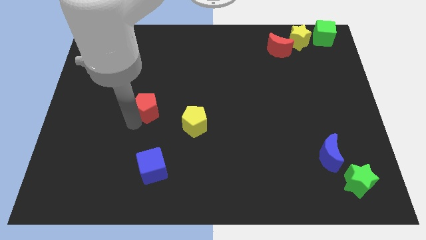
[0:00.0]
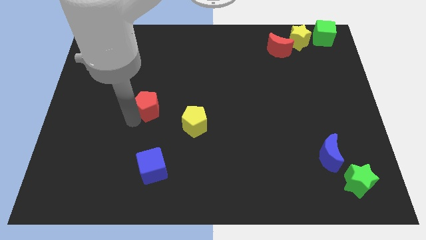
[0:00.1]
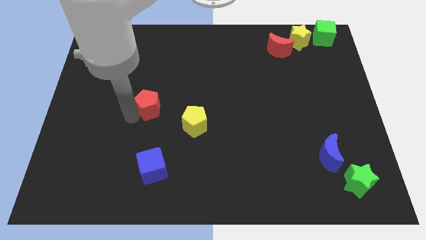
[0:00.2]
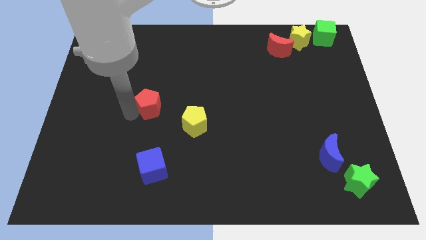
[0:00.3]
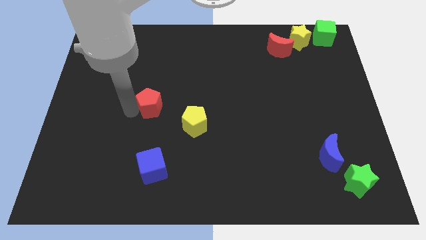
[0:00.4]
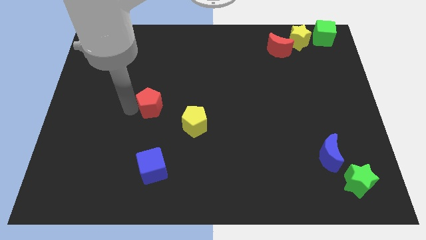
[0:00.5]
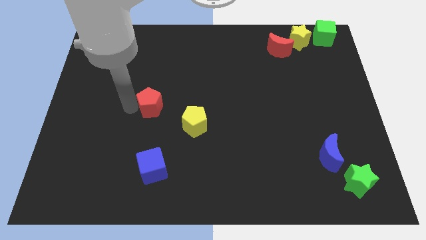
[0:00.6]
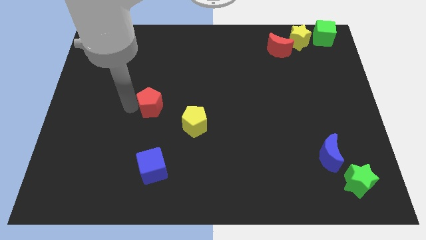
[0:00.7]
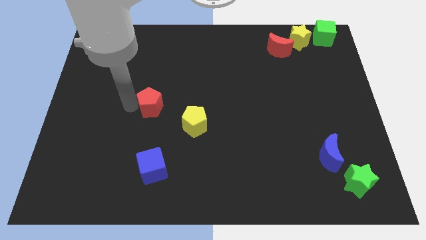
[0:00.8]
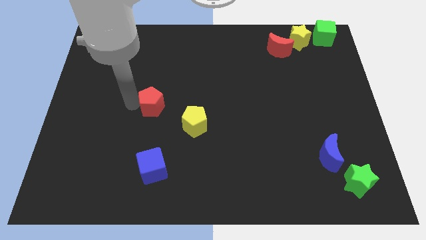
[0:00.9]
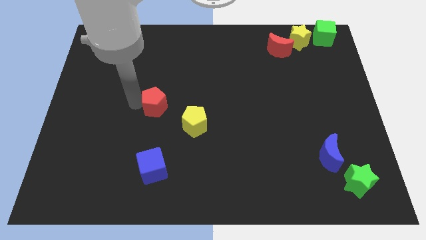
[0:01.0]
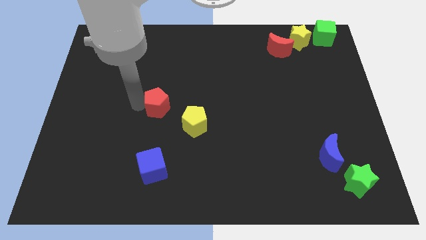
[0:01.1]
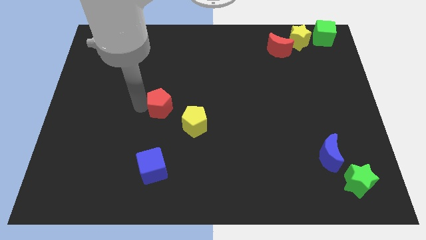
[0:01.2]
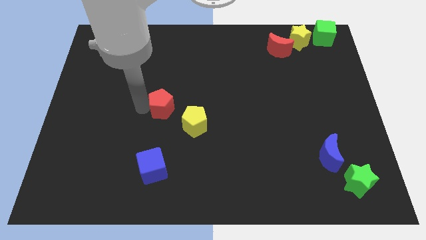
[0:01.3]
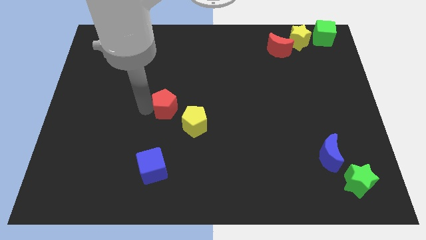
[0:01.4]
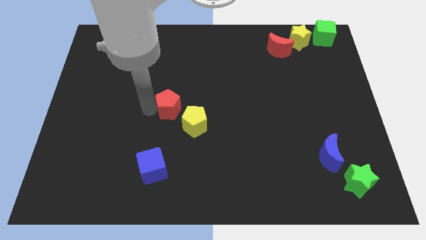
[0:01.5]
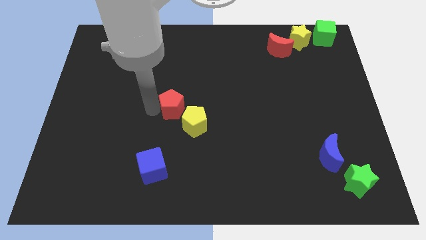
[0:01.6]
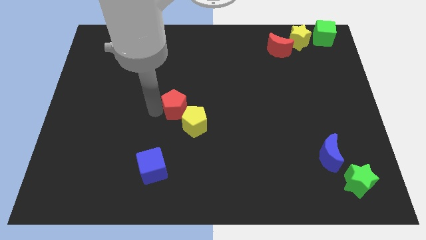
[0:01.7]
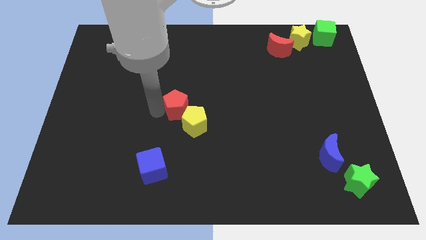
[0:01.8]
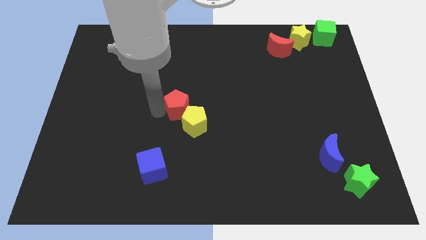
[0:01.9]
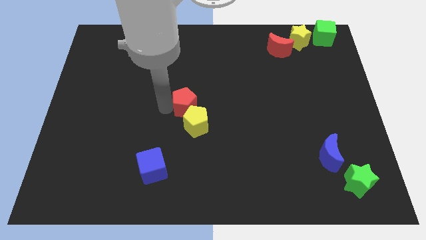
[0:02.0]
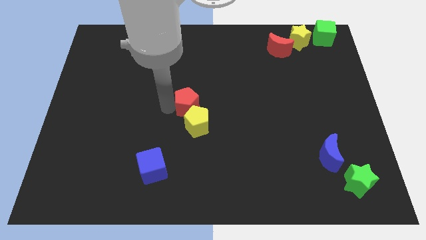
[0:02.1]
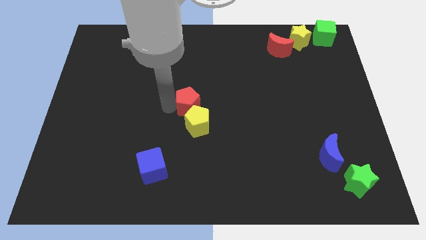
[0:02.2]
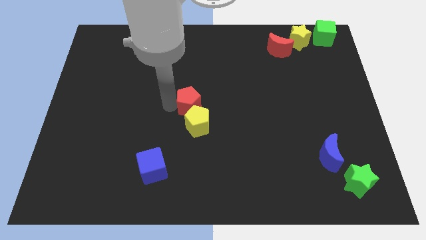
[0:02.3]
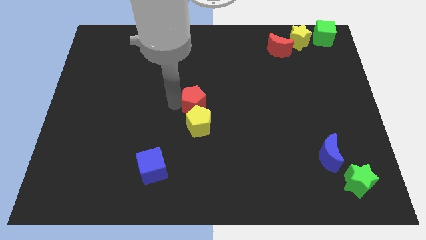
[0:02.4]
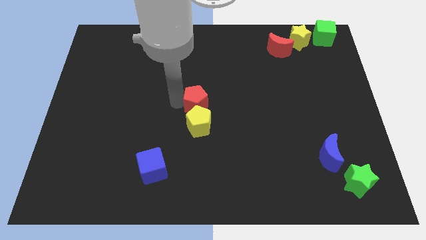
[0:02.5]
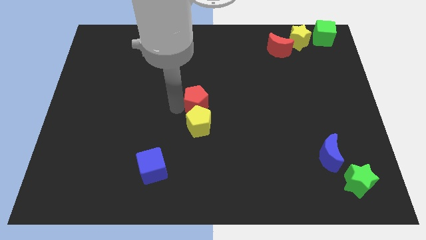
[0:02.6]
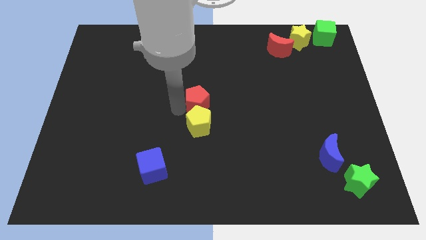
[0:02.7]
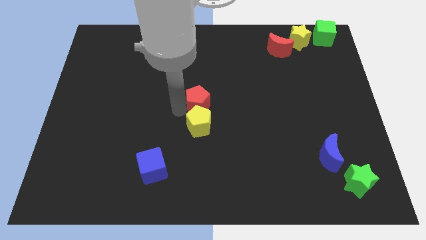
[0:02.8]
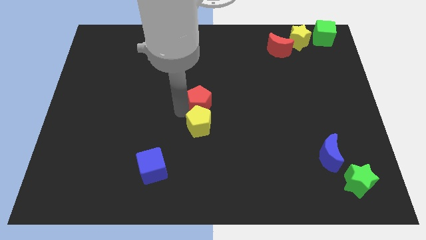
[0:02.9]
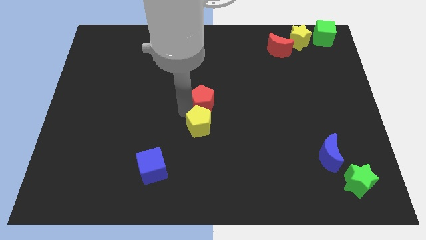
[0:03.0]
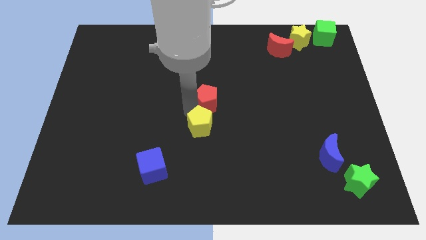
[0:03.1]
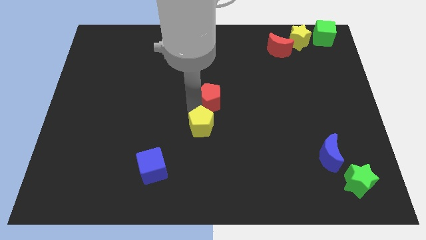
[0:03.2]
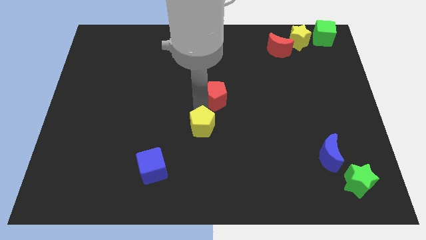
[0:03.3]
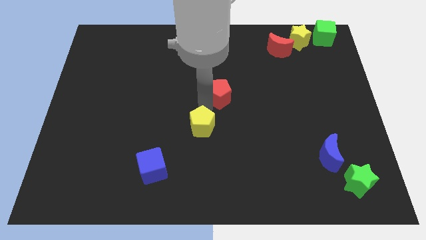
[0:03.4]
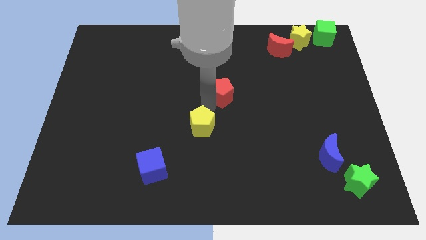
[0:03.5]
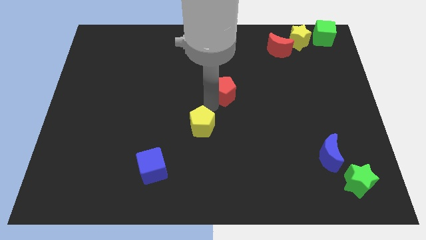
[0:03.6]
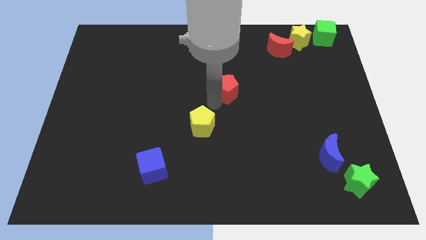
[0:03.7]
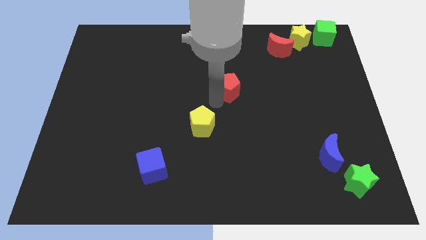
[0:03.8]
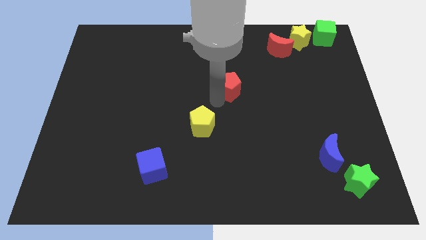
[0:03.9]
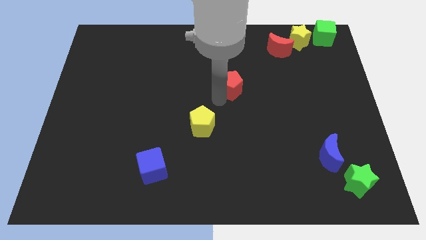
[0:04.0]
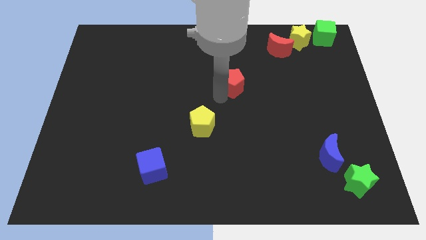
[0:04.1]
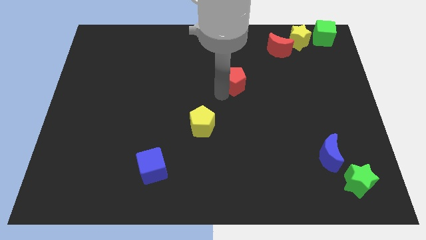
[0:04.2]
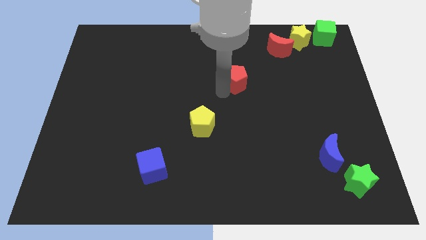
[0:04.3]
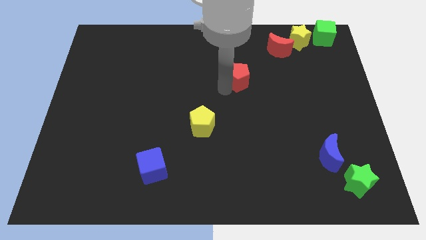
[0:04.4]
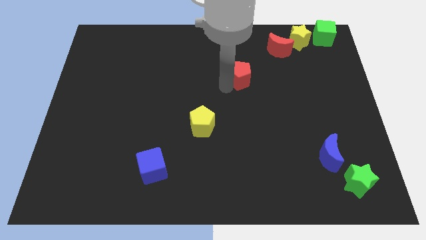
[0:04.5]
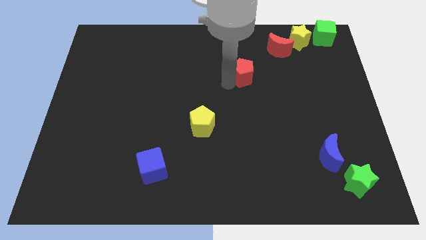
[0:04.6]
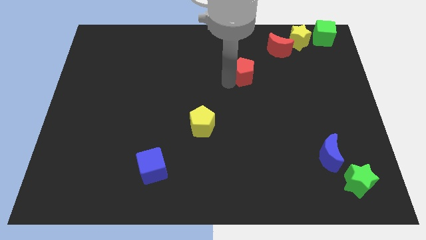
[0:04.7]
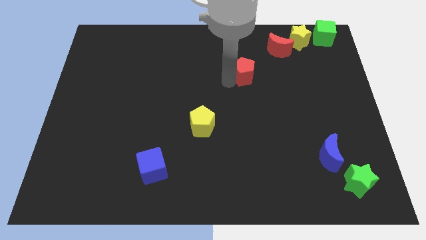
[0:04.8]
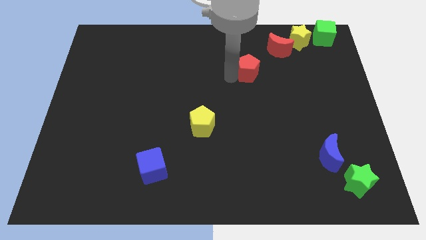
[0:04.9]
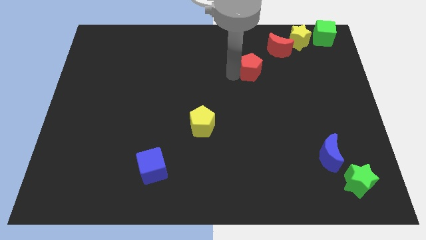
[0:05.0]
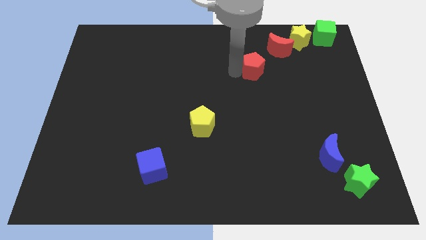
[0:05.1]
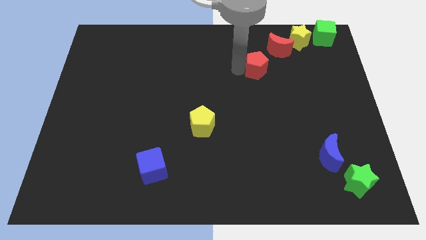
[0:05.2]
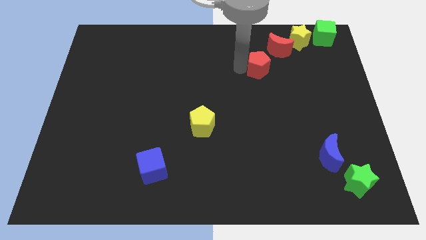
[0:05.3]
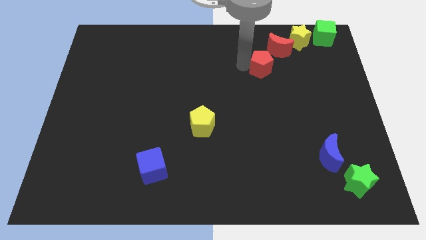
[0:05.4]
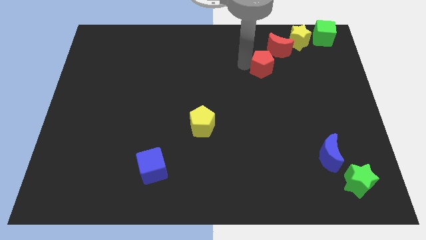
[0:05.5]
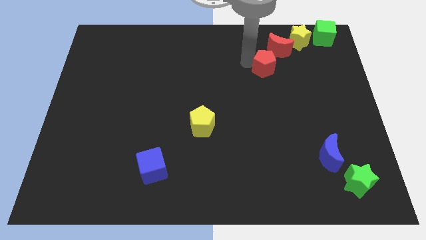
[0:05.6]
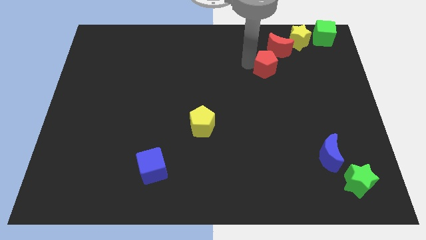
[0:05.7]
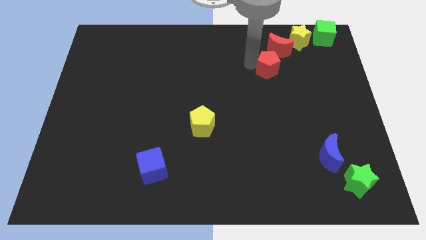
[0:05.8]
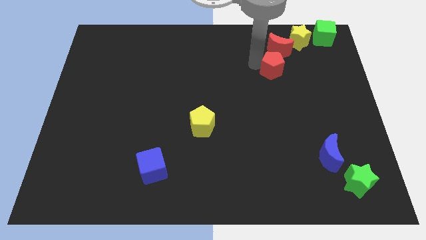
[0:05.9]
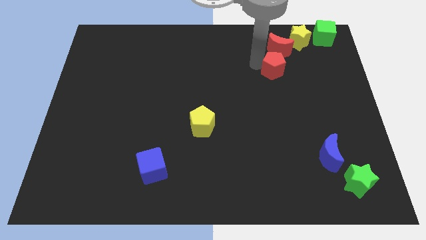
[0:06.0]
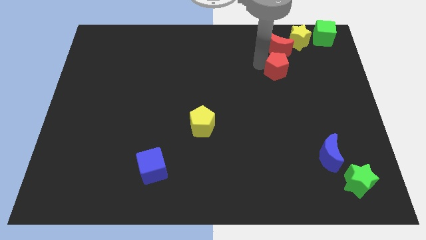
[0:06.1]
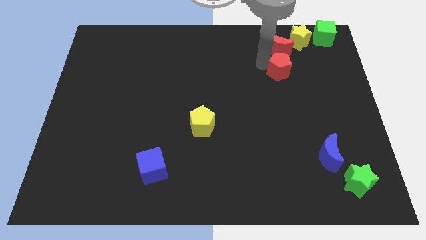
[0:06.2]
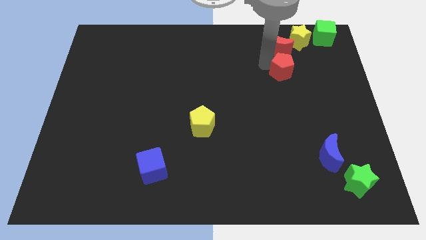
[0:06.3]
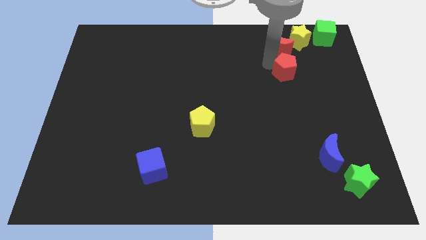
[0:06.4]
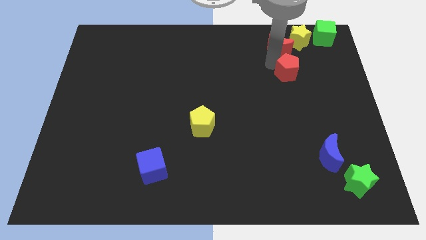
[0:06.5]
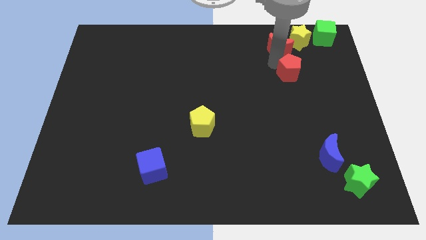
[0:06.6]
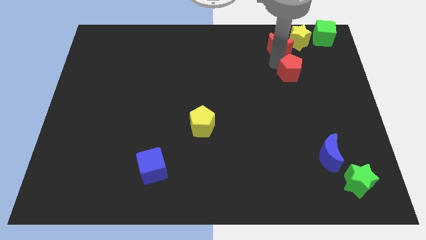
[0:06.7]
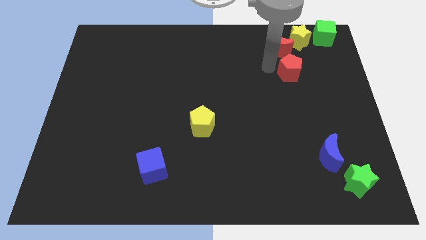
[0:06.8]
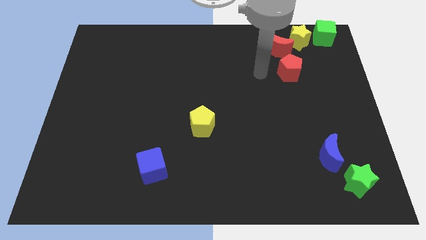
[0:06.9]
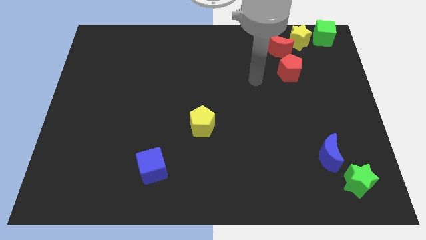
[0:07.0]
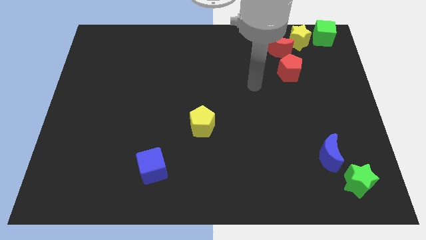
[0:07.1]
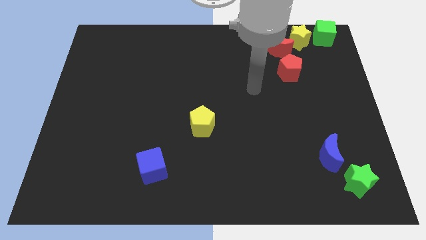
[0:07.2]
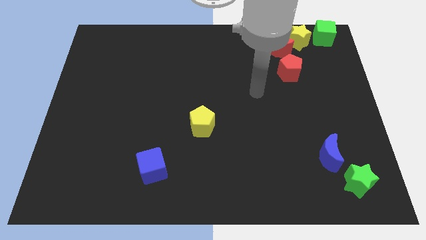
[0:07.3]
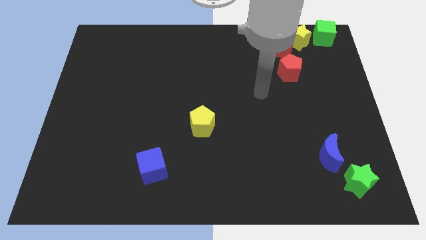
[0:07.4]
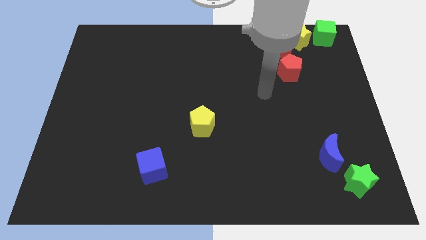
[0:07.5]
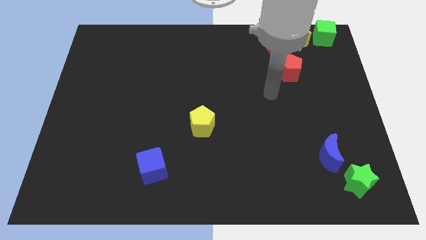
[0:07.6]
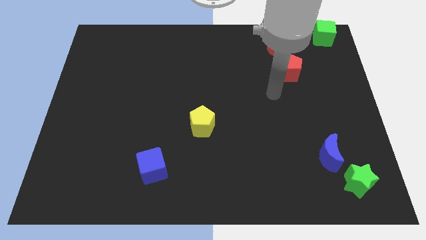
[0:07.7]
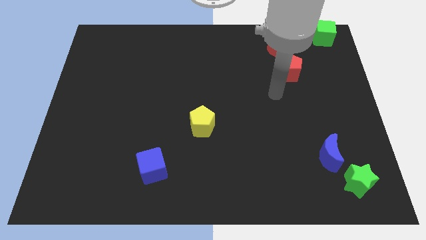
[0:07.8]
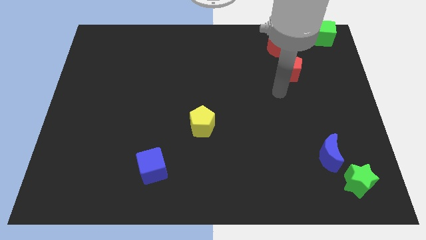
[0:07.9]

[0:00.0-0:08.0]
place red pentagon below red moon

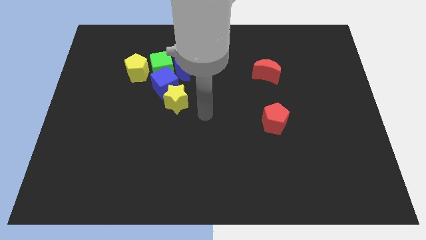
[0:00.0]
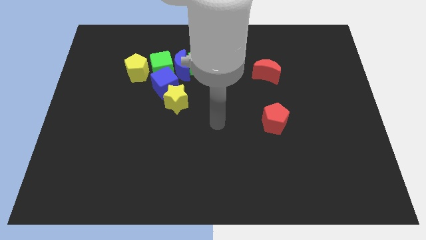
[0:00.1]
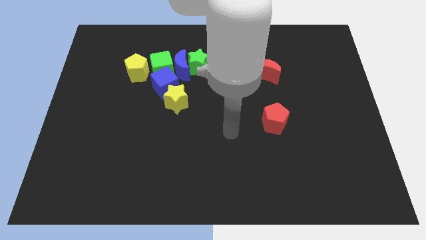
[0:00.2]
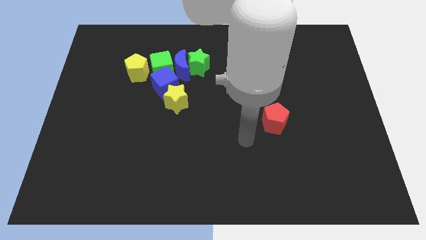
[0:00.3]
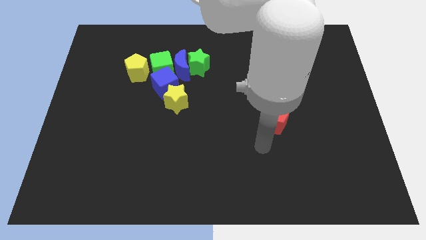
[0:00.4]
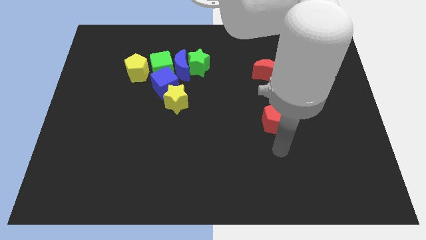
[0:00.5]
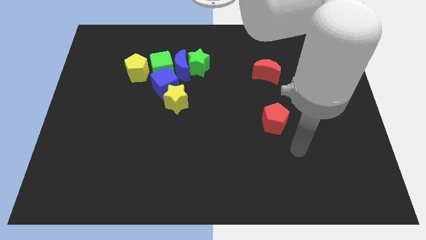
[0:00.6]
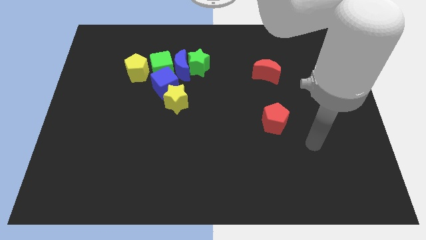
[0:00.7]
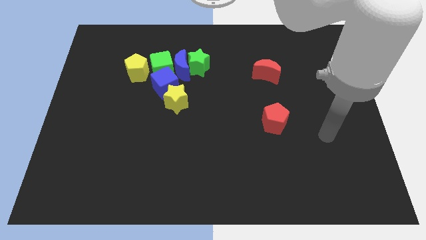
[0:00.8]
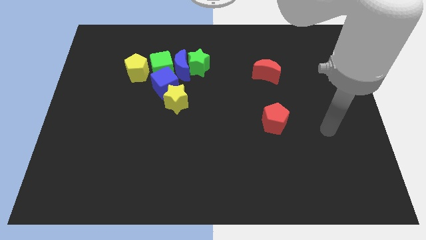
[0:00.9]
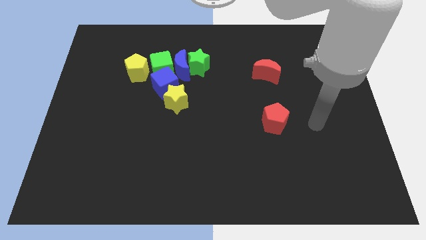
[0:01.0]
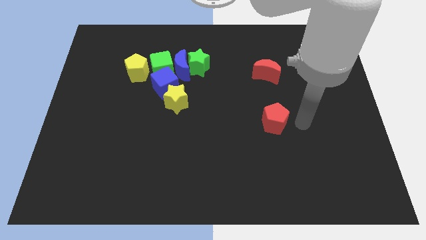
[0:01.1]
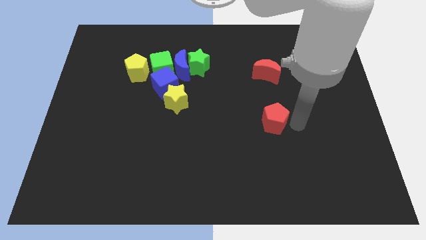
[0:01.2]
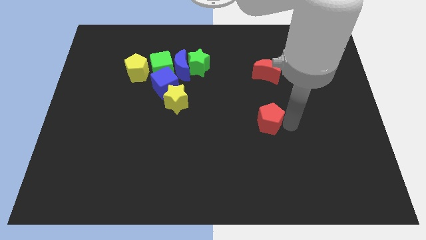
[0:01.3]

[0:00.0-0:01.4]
move your arm towards the red pentagon
